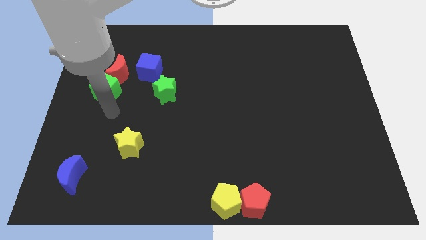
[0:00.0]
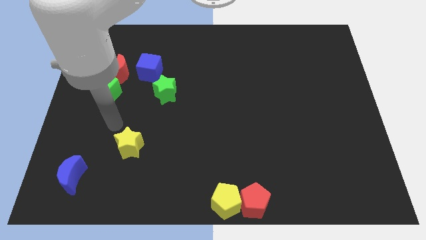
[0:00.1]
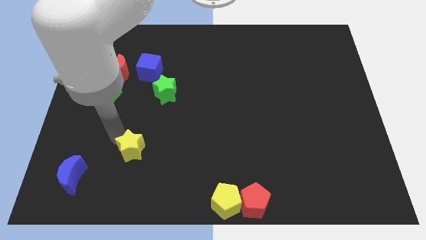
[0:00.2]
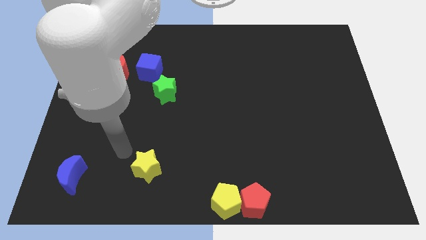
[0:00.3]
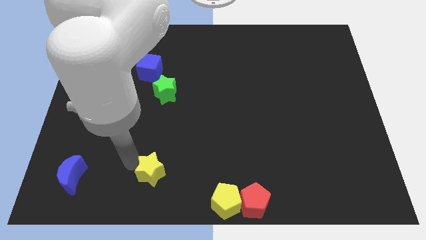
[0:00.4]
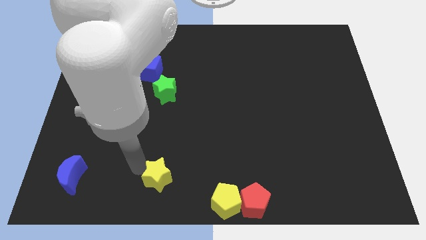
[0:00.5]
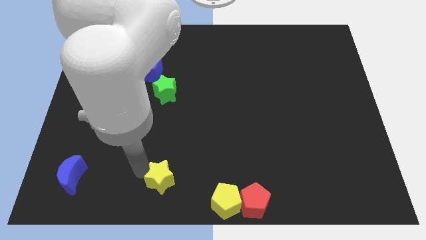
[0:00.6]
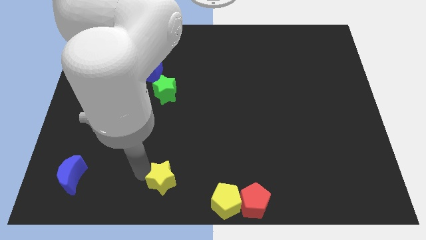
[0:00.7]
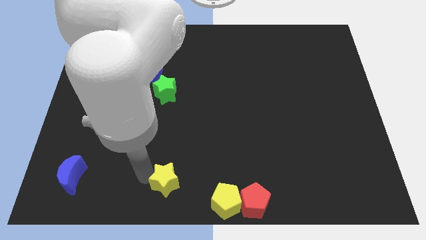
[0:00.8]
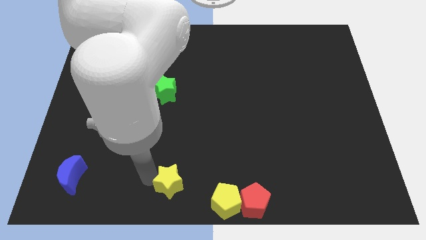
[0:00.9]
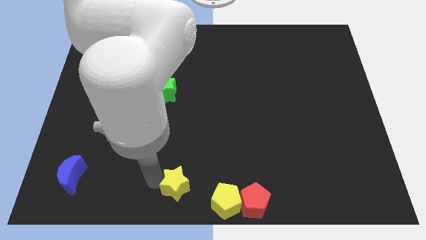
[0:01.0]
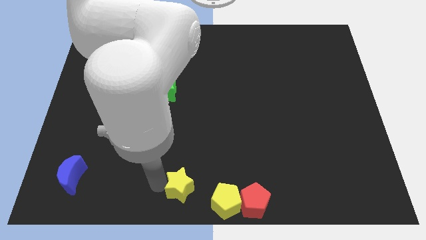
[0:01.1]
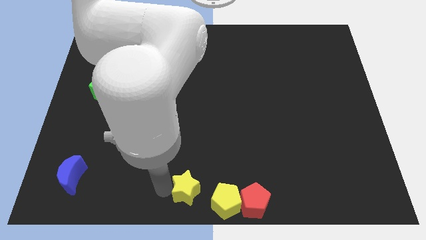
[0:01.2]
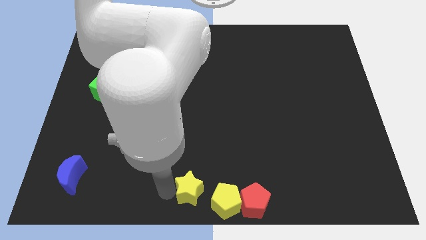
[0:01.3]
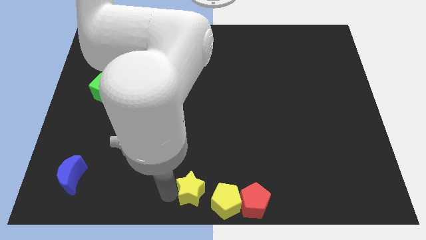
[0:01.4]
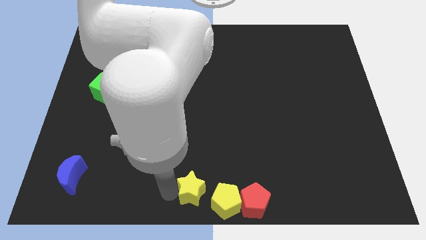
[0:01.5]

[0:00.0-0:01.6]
slide the yellow star close to the yellow pentagon

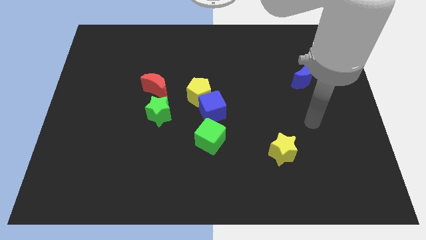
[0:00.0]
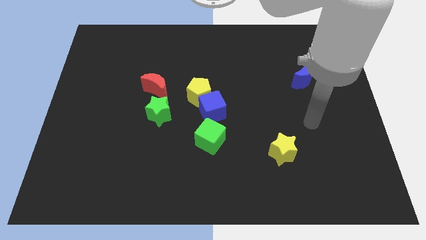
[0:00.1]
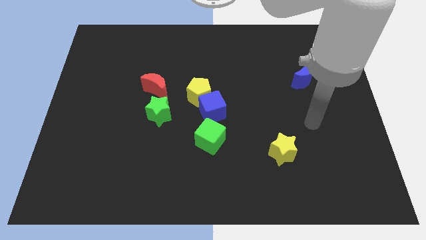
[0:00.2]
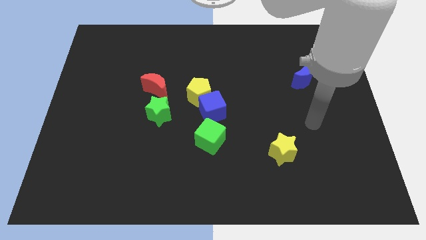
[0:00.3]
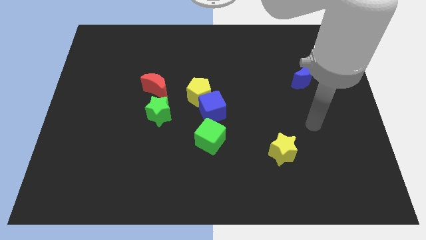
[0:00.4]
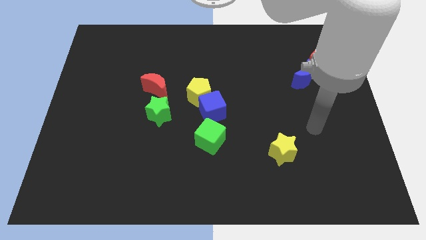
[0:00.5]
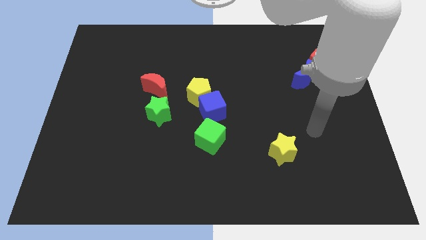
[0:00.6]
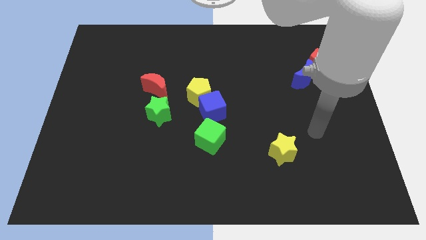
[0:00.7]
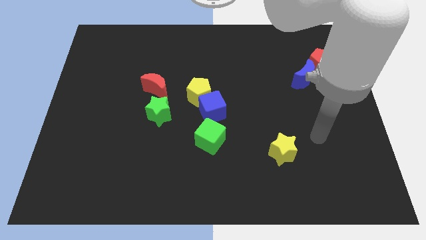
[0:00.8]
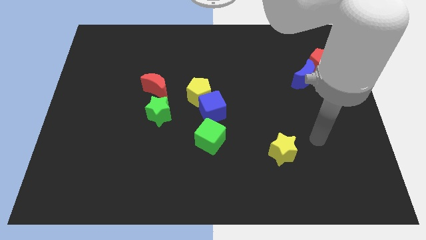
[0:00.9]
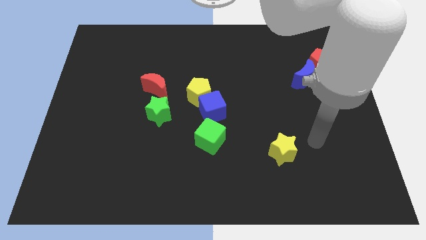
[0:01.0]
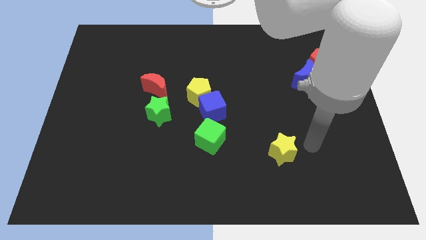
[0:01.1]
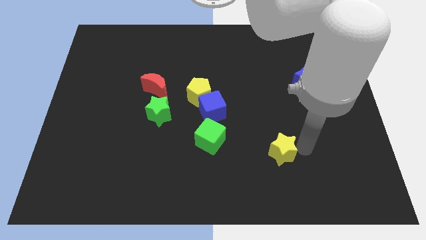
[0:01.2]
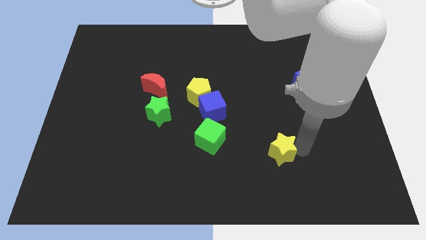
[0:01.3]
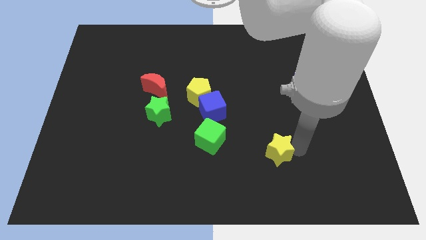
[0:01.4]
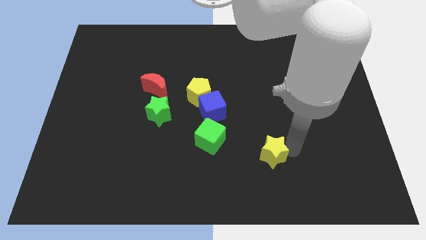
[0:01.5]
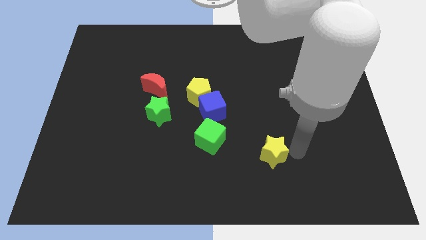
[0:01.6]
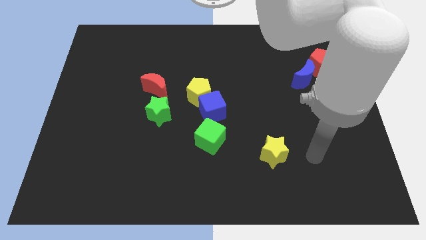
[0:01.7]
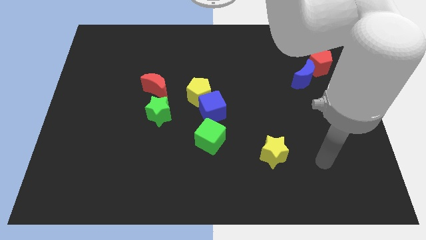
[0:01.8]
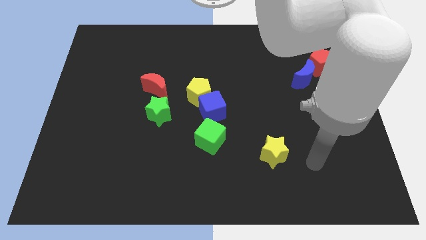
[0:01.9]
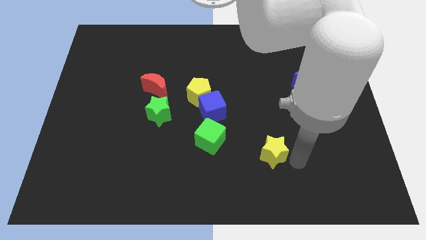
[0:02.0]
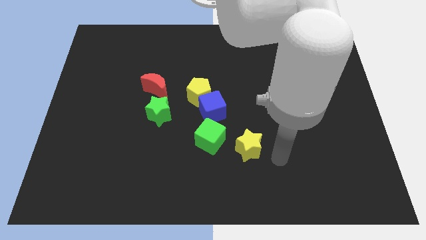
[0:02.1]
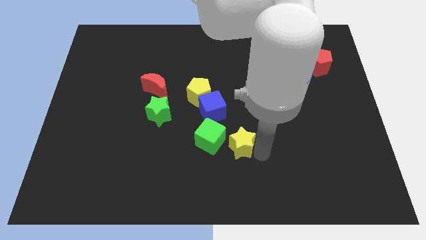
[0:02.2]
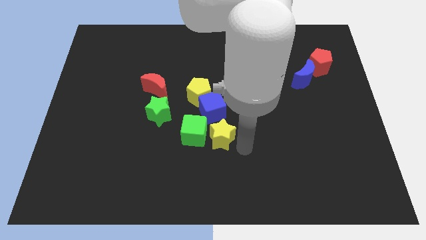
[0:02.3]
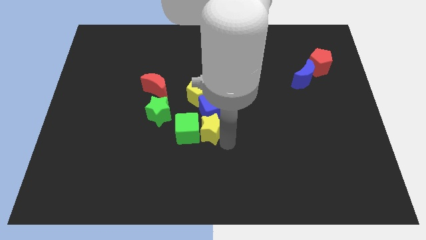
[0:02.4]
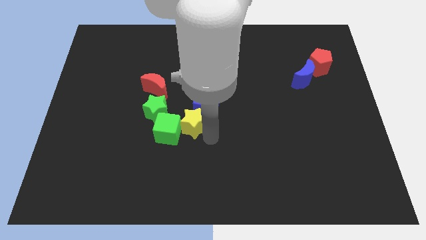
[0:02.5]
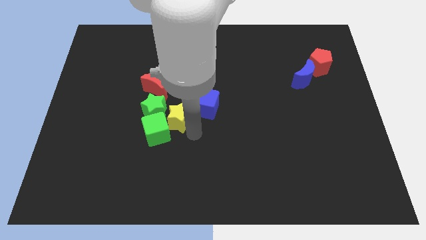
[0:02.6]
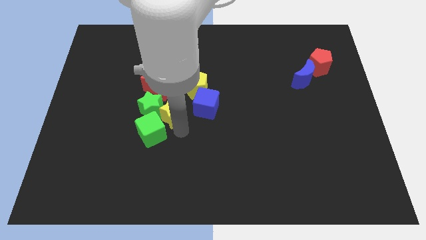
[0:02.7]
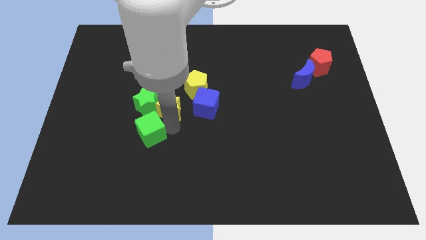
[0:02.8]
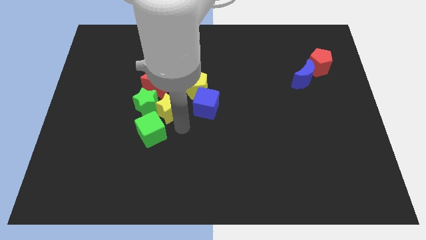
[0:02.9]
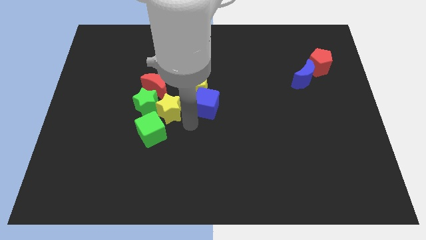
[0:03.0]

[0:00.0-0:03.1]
push the green cube and yellow star into the green star

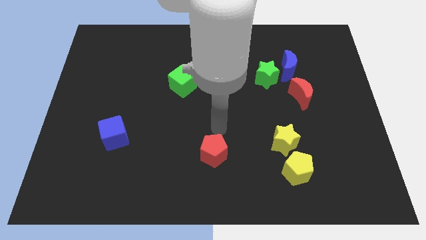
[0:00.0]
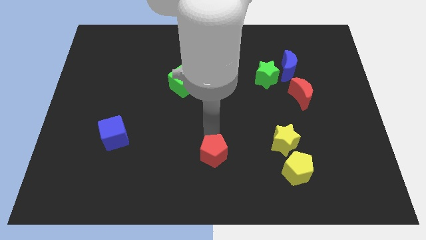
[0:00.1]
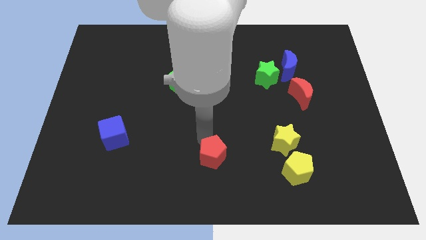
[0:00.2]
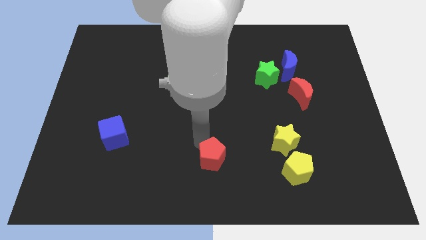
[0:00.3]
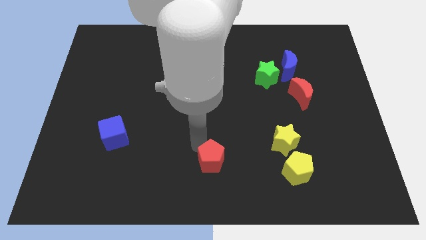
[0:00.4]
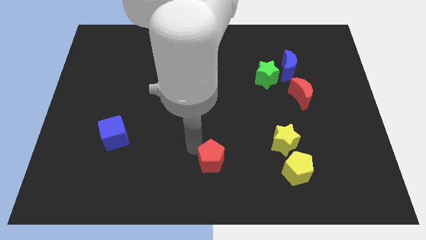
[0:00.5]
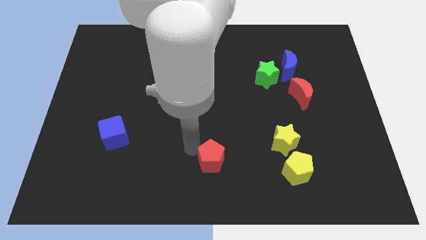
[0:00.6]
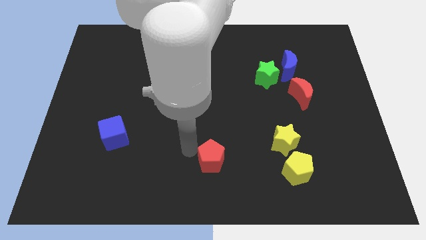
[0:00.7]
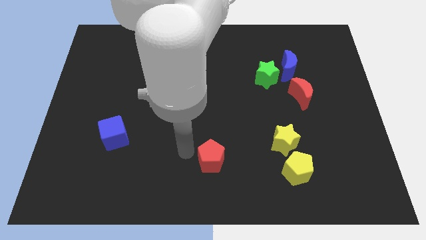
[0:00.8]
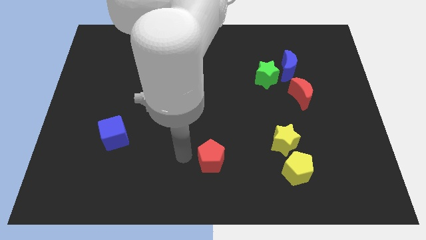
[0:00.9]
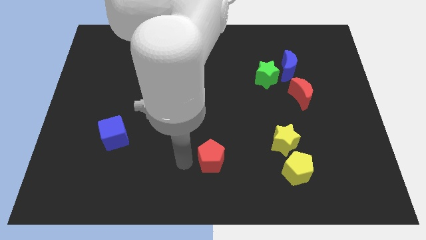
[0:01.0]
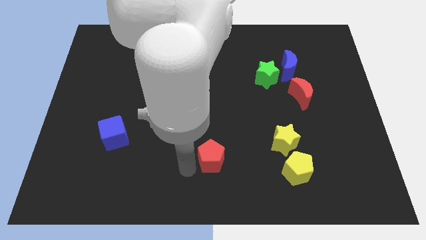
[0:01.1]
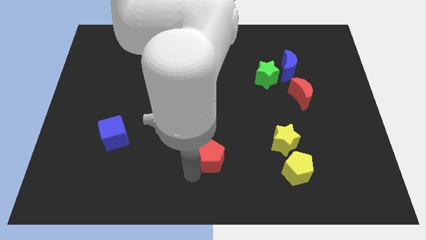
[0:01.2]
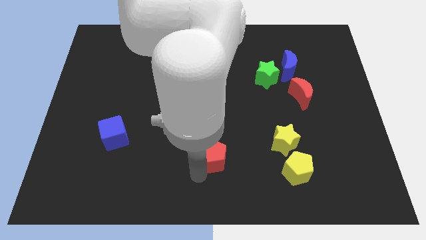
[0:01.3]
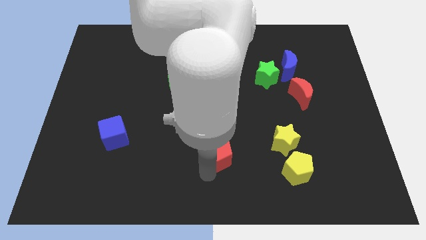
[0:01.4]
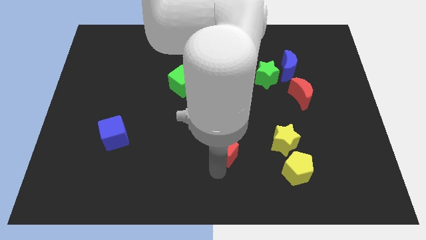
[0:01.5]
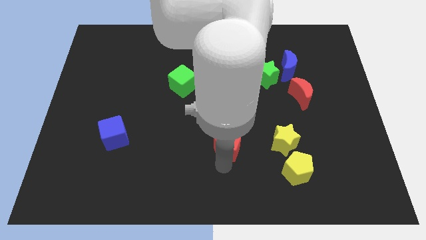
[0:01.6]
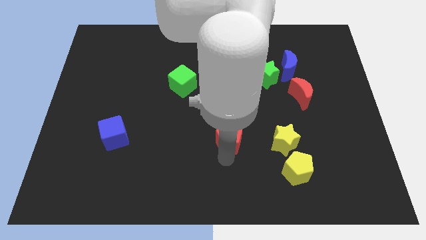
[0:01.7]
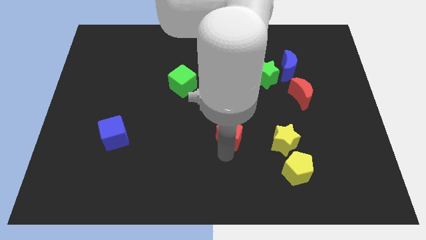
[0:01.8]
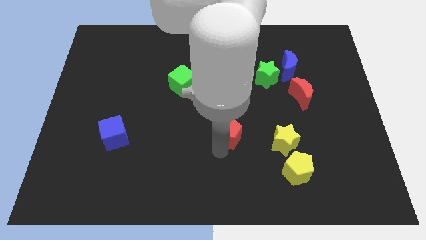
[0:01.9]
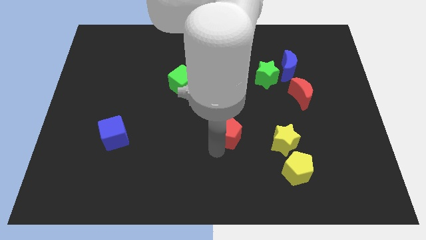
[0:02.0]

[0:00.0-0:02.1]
slide the red pentagon parallel left to the yellow star

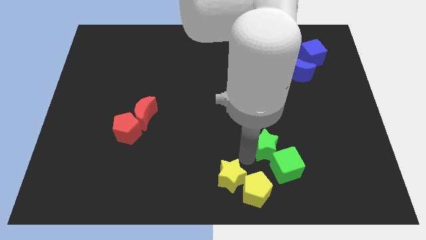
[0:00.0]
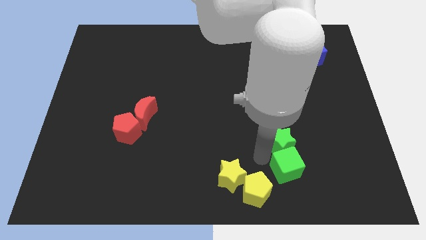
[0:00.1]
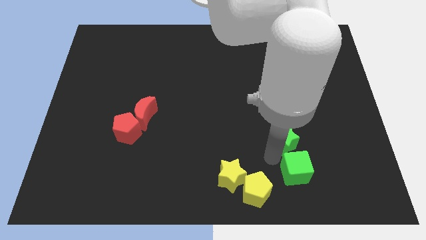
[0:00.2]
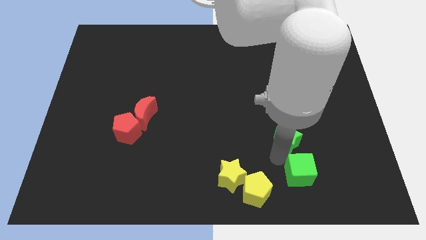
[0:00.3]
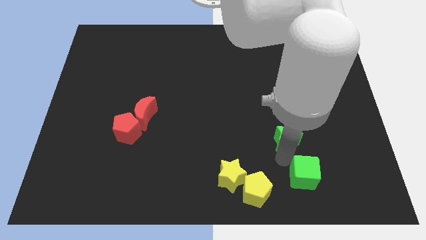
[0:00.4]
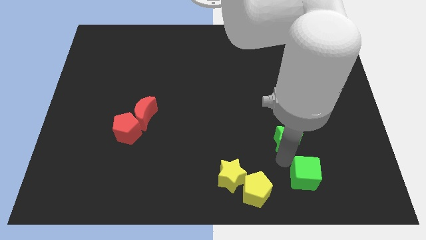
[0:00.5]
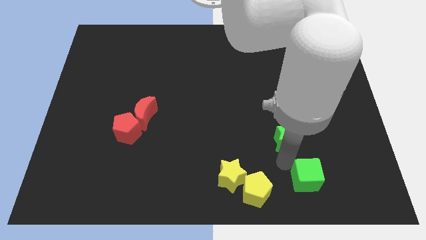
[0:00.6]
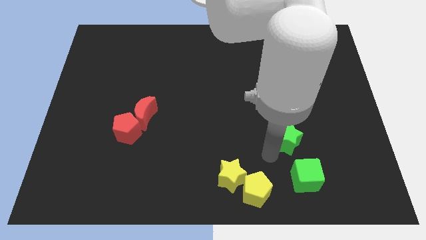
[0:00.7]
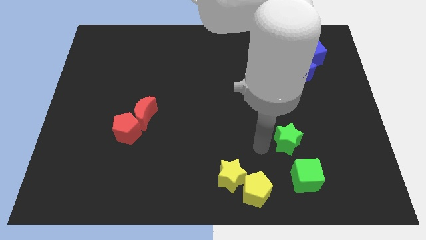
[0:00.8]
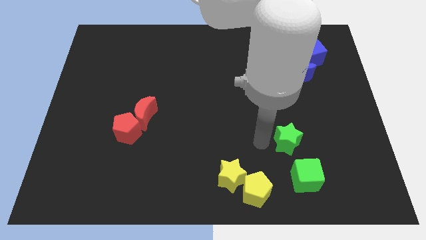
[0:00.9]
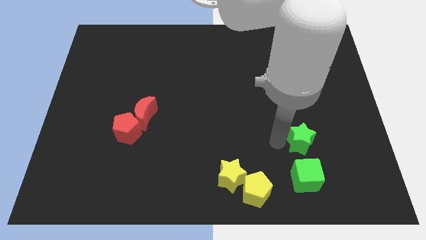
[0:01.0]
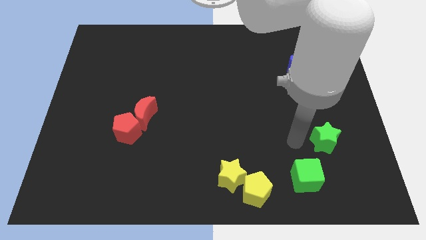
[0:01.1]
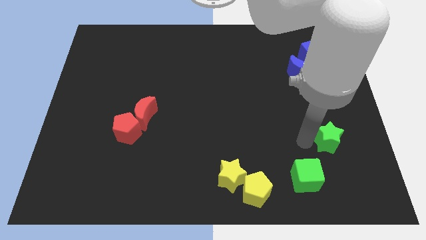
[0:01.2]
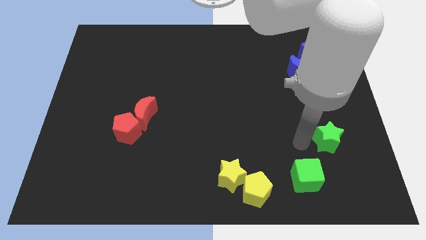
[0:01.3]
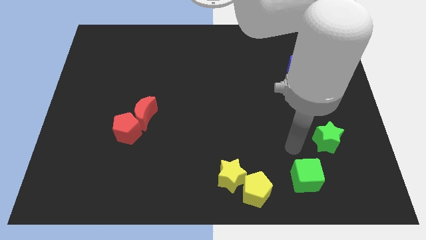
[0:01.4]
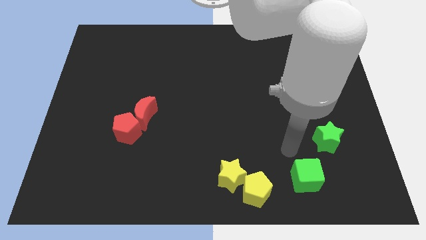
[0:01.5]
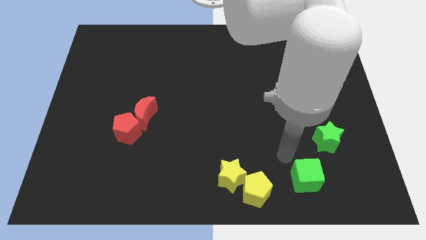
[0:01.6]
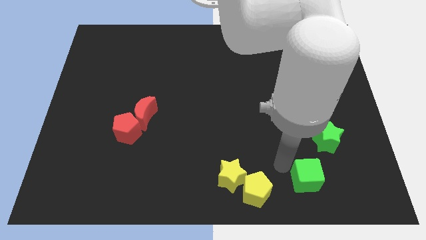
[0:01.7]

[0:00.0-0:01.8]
separate the green blocks from each other

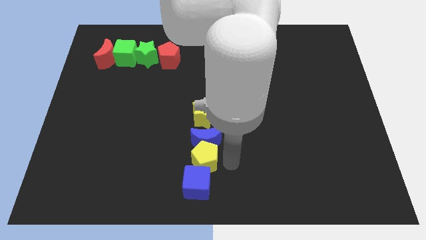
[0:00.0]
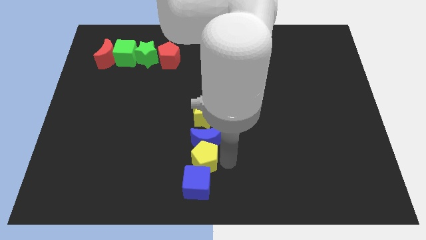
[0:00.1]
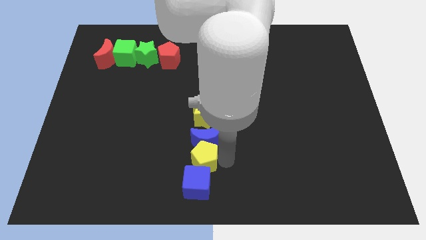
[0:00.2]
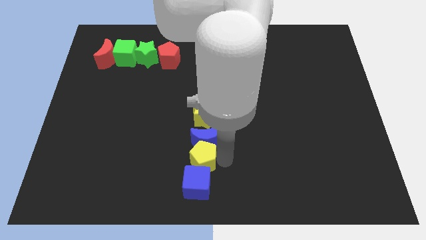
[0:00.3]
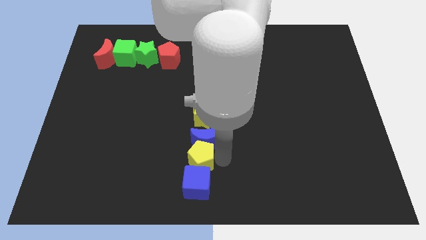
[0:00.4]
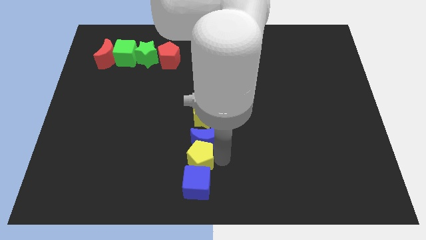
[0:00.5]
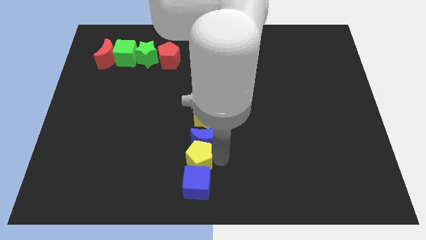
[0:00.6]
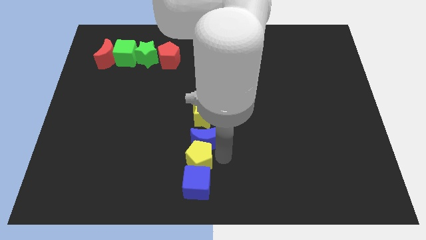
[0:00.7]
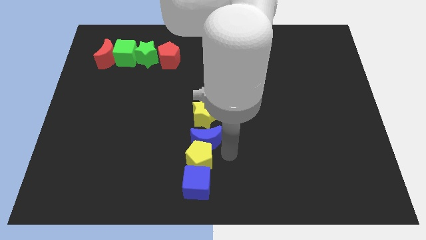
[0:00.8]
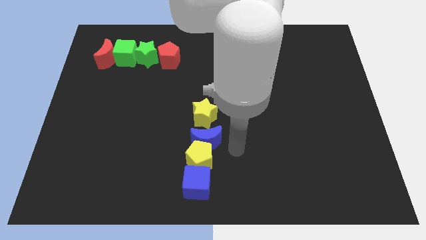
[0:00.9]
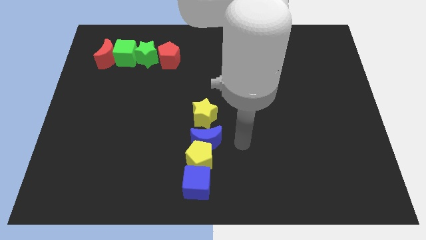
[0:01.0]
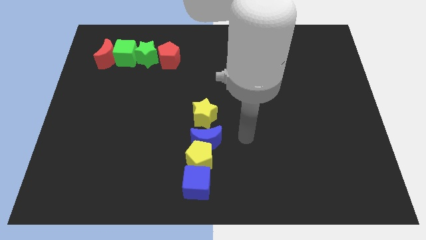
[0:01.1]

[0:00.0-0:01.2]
place the yellow pentagon in between the top of the blue moon and the blue cube
